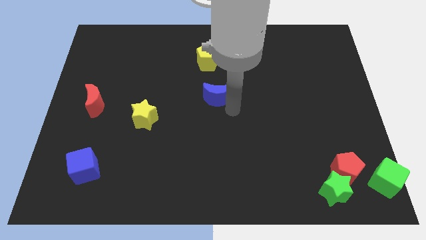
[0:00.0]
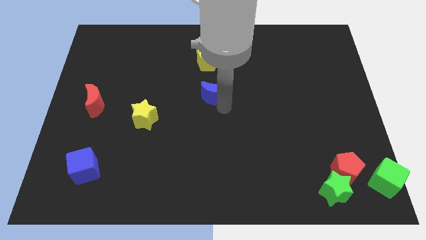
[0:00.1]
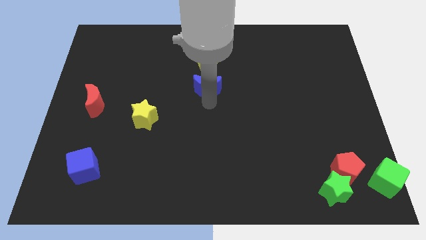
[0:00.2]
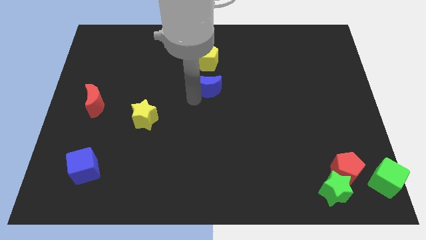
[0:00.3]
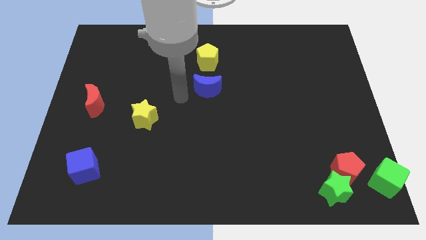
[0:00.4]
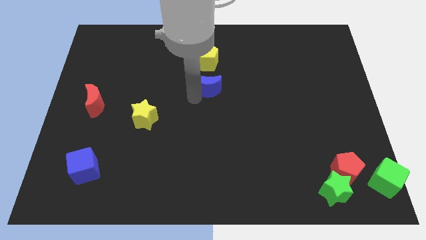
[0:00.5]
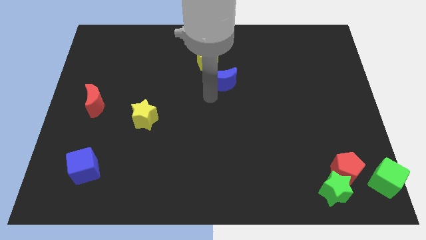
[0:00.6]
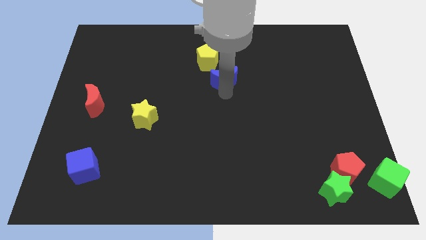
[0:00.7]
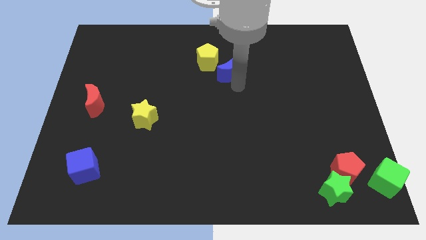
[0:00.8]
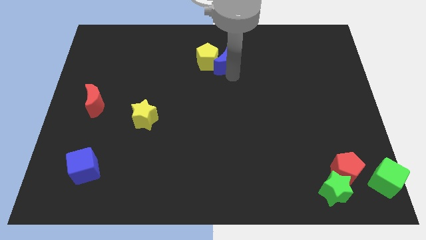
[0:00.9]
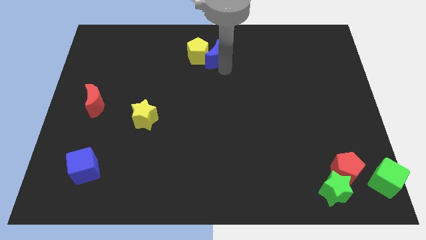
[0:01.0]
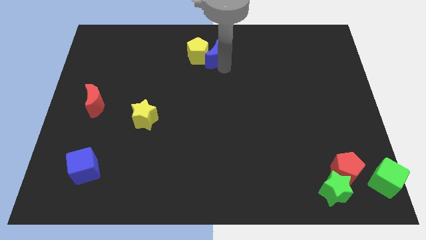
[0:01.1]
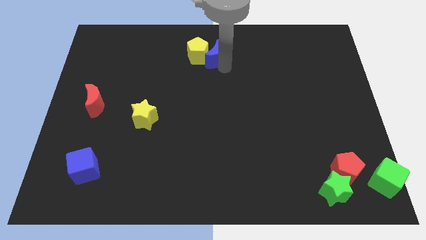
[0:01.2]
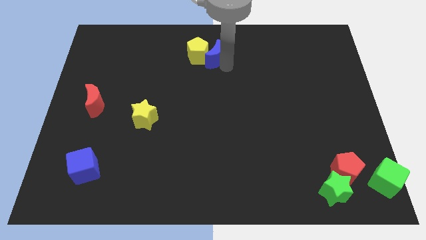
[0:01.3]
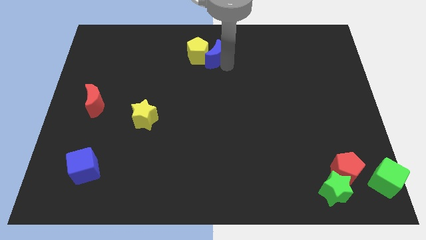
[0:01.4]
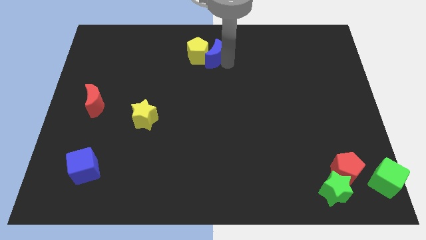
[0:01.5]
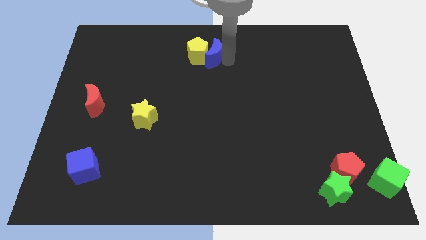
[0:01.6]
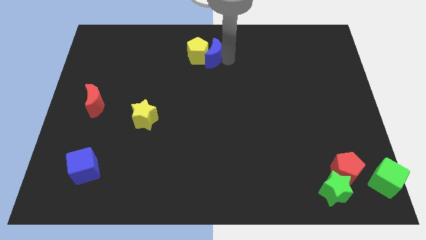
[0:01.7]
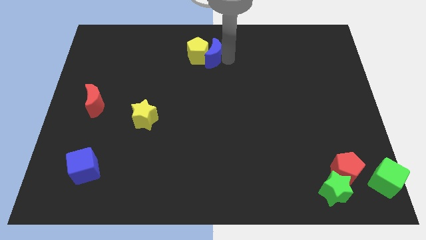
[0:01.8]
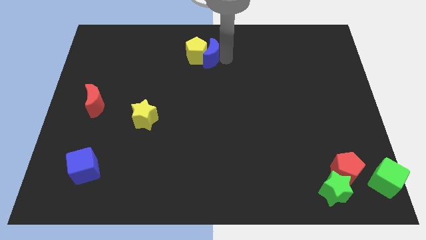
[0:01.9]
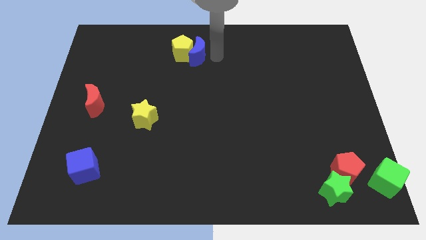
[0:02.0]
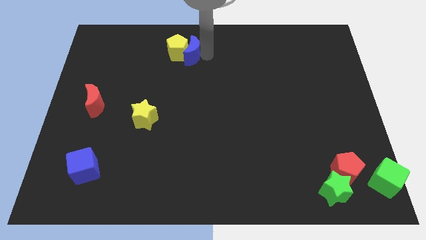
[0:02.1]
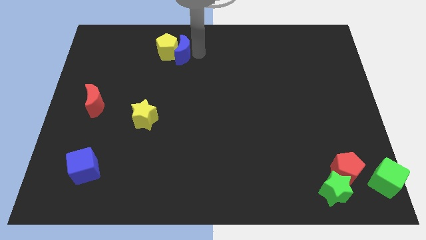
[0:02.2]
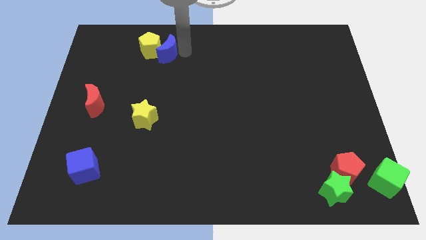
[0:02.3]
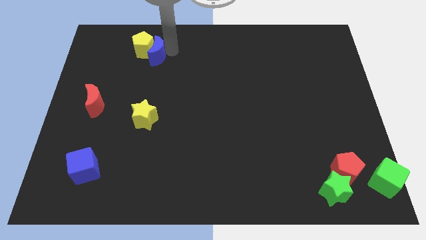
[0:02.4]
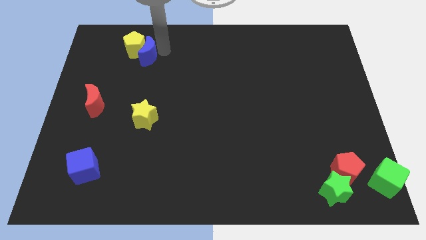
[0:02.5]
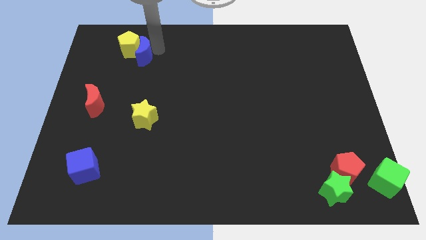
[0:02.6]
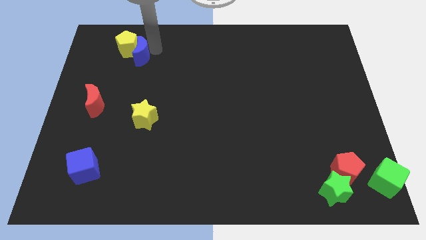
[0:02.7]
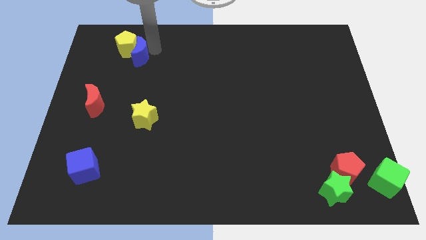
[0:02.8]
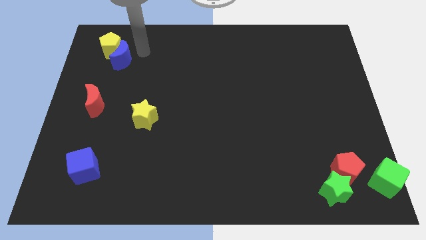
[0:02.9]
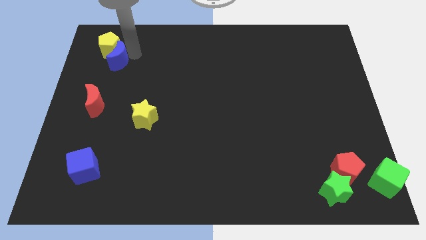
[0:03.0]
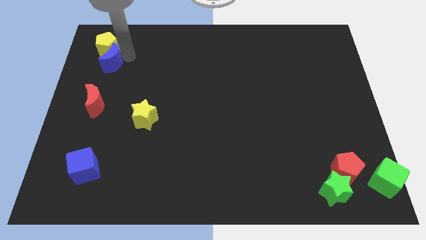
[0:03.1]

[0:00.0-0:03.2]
push the blue moon and yellow pentagon to the top left side of the board

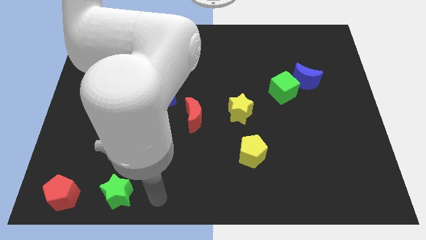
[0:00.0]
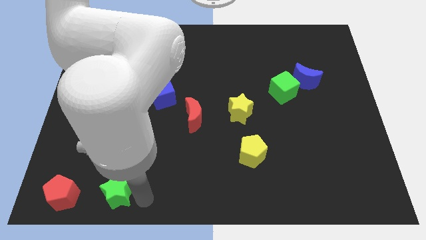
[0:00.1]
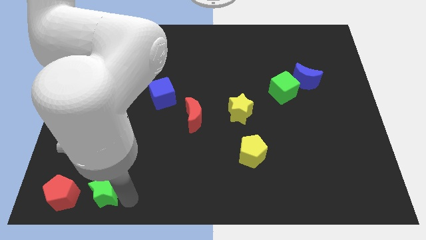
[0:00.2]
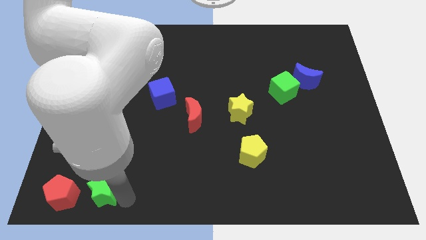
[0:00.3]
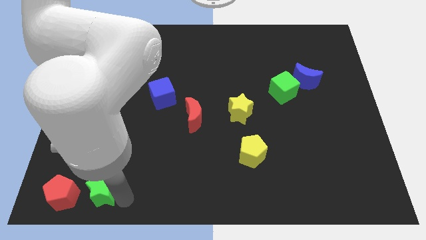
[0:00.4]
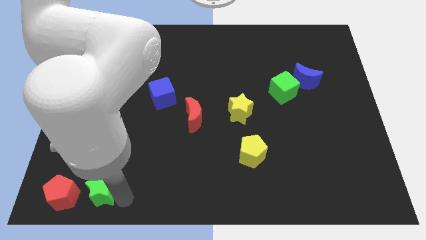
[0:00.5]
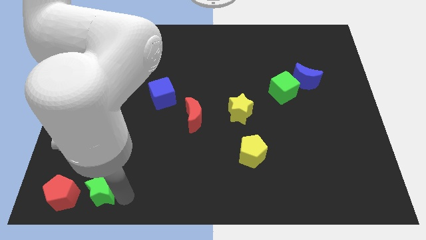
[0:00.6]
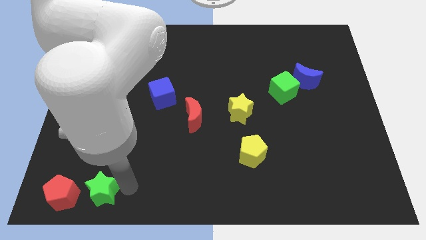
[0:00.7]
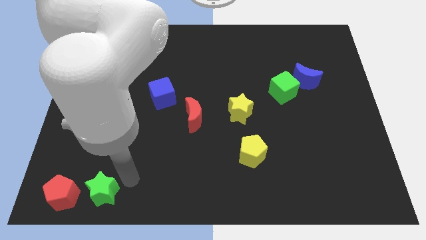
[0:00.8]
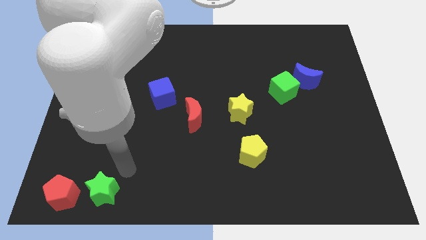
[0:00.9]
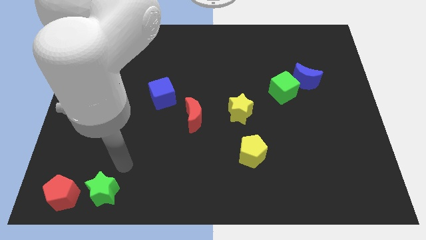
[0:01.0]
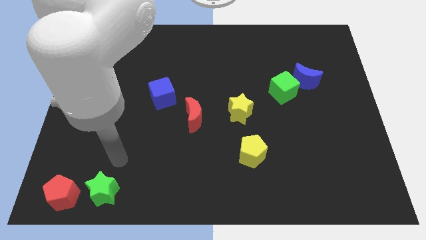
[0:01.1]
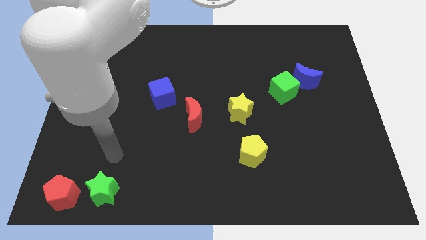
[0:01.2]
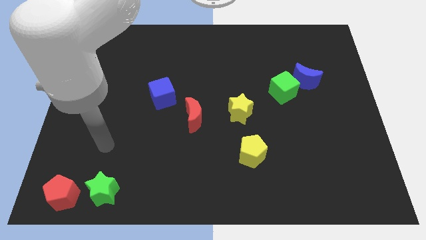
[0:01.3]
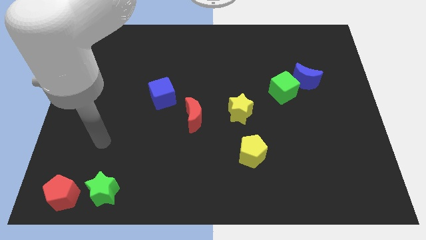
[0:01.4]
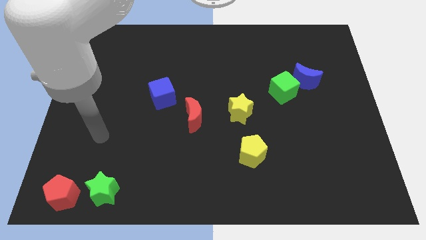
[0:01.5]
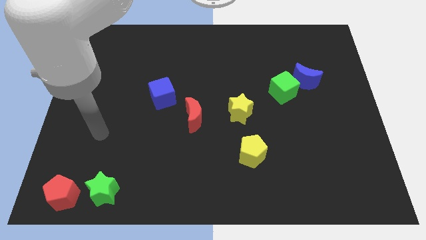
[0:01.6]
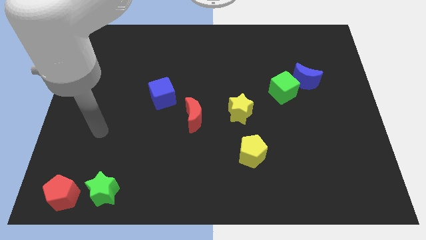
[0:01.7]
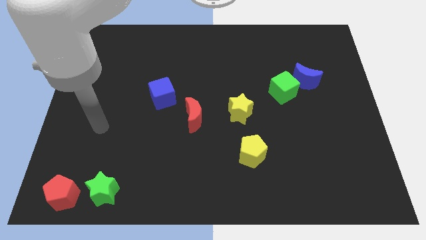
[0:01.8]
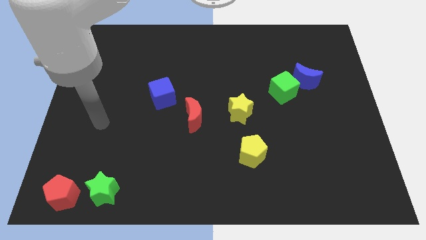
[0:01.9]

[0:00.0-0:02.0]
slightly push the green star towards the red pentagon

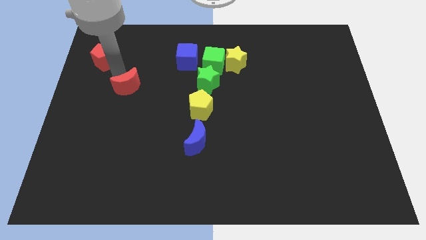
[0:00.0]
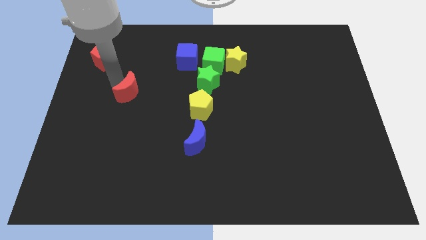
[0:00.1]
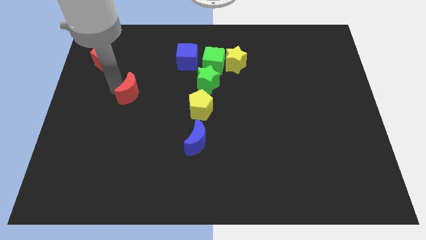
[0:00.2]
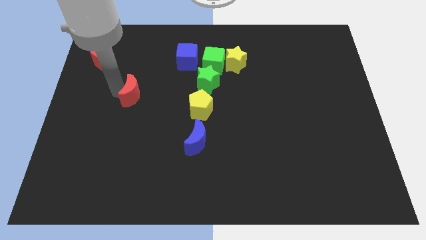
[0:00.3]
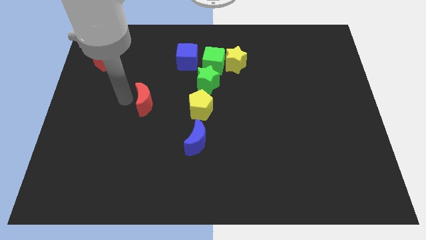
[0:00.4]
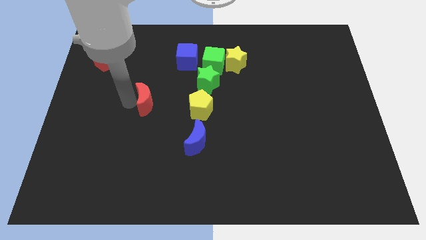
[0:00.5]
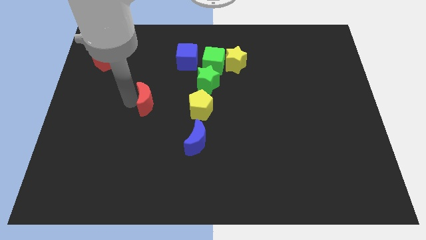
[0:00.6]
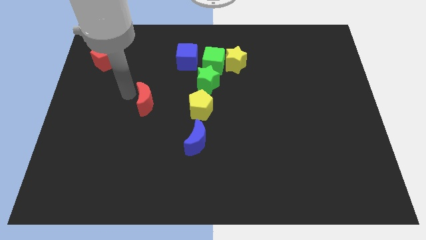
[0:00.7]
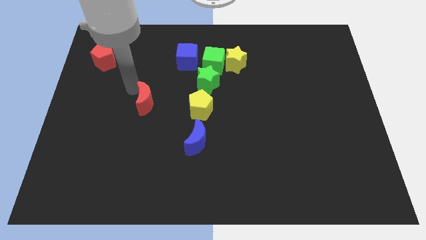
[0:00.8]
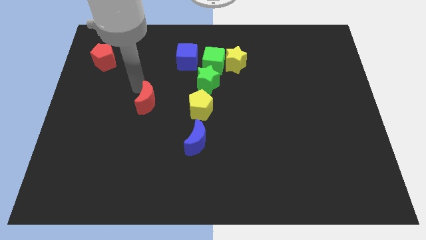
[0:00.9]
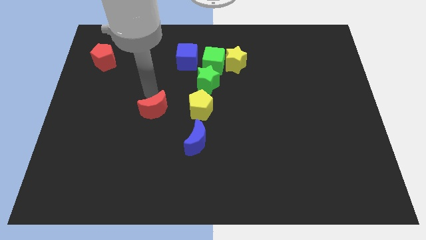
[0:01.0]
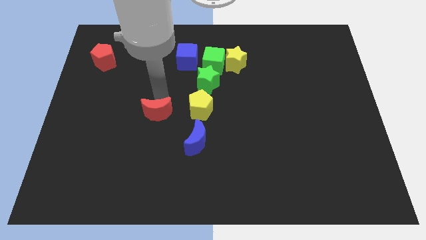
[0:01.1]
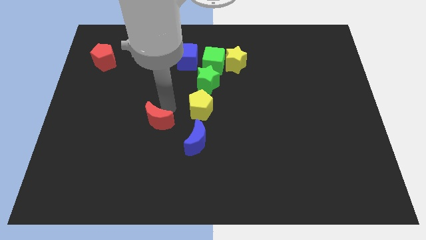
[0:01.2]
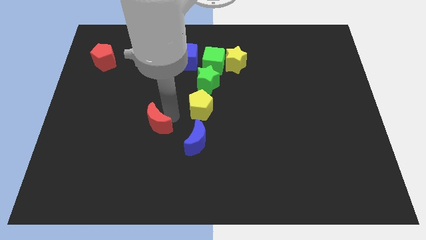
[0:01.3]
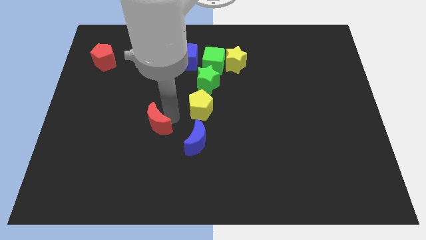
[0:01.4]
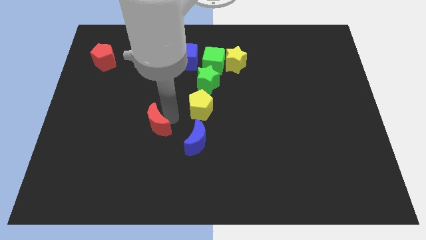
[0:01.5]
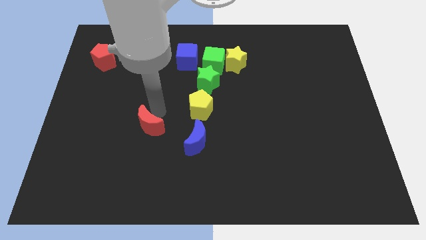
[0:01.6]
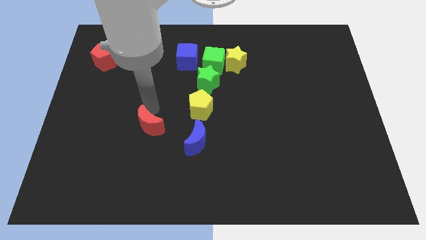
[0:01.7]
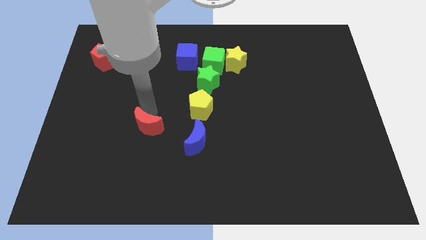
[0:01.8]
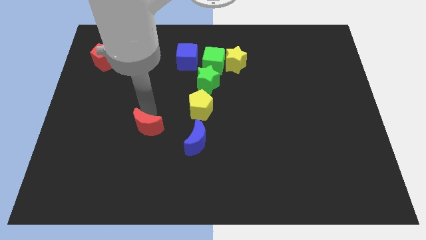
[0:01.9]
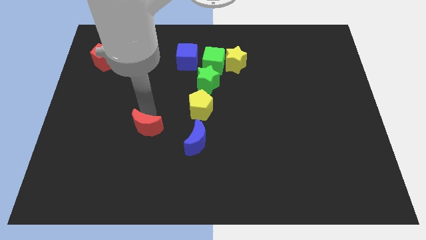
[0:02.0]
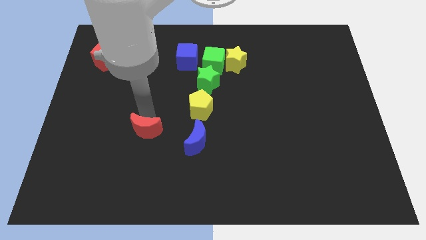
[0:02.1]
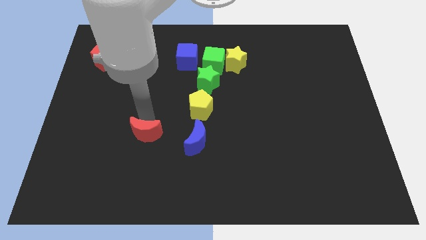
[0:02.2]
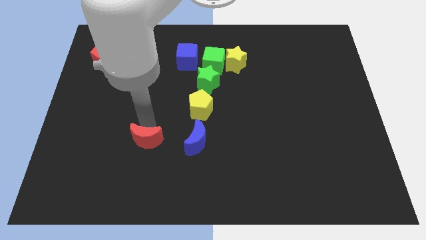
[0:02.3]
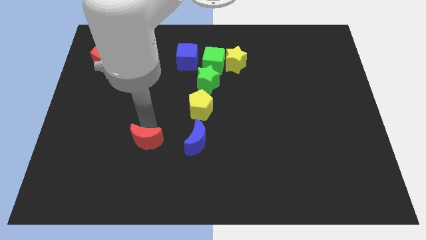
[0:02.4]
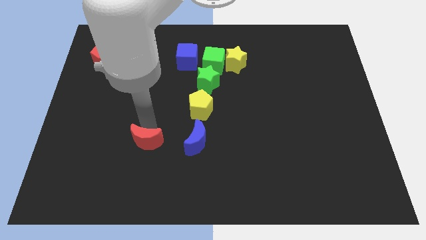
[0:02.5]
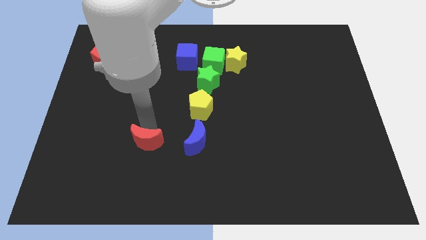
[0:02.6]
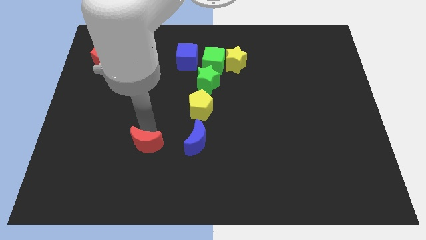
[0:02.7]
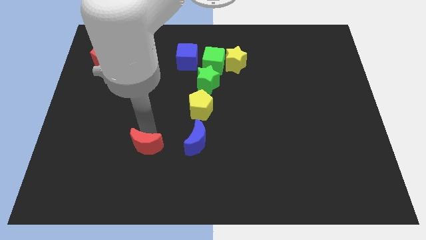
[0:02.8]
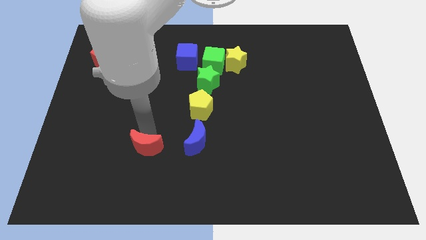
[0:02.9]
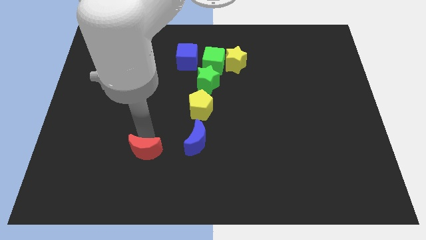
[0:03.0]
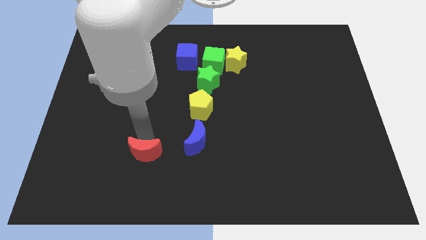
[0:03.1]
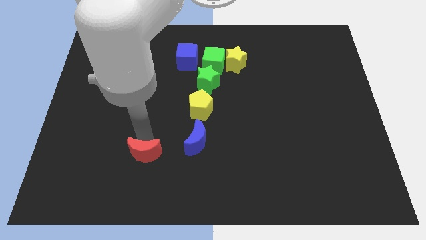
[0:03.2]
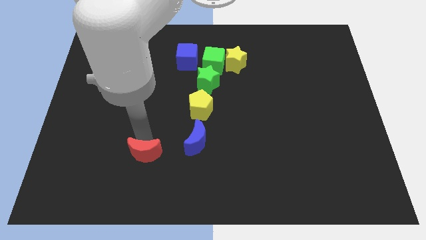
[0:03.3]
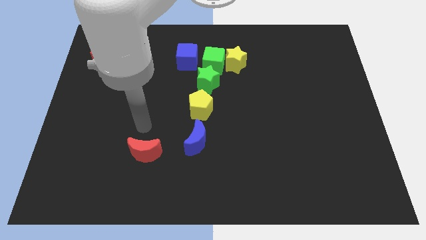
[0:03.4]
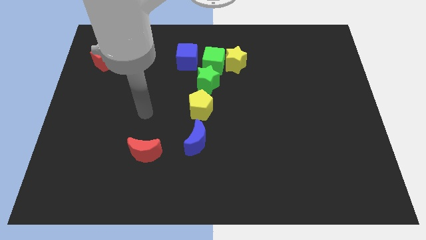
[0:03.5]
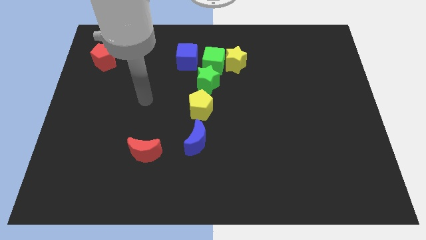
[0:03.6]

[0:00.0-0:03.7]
push the red crescent to the bottom left of the blue moon
